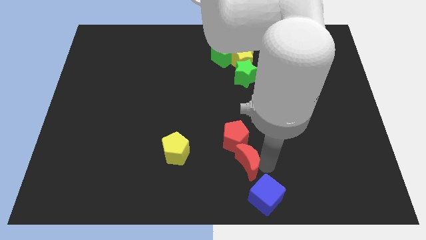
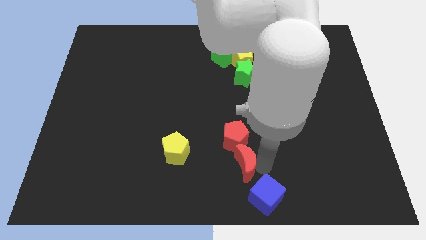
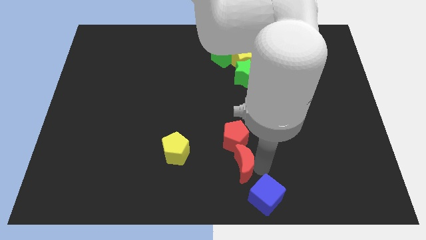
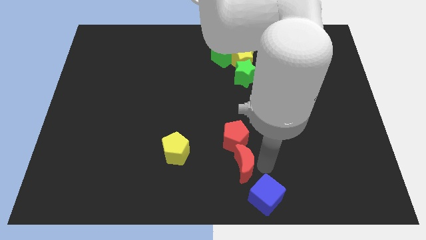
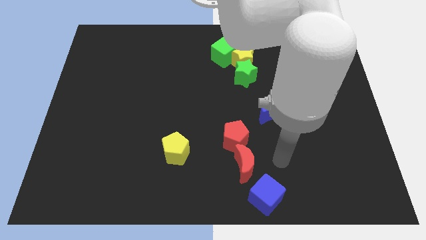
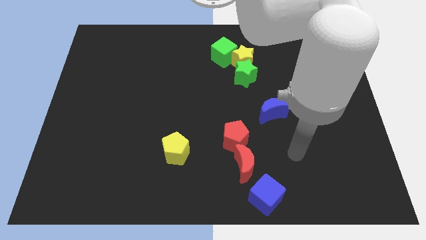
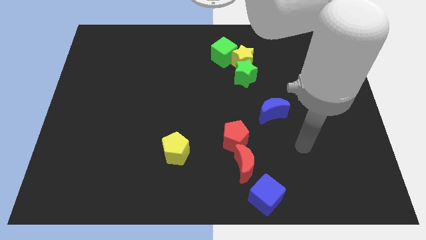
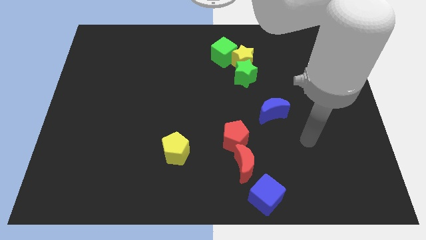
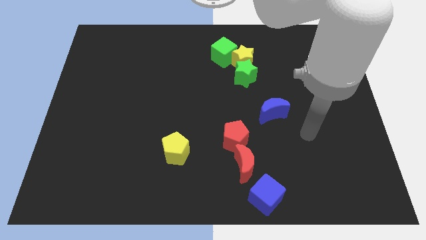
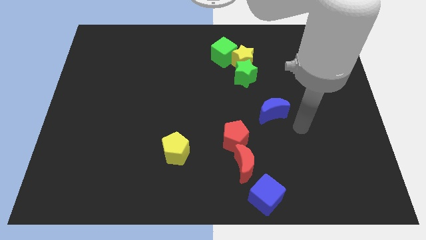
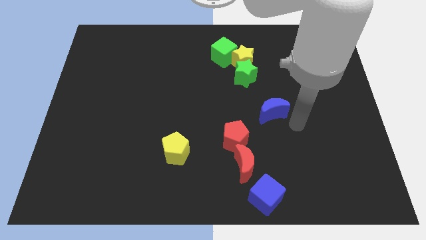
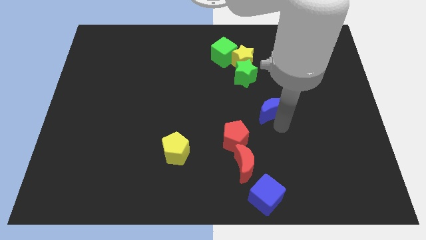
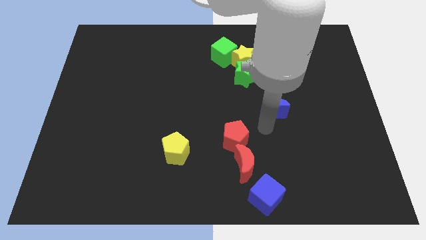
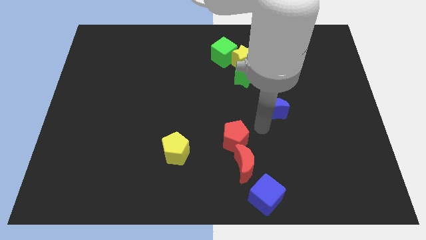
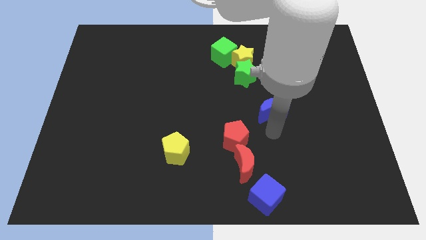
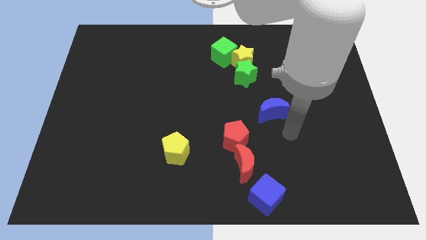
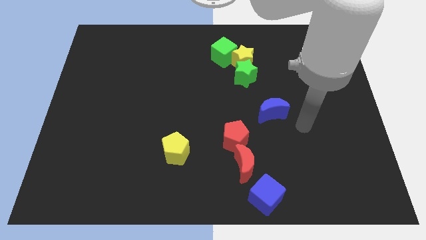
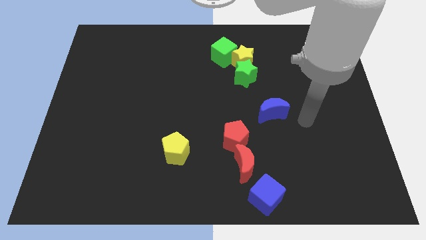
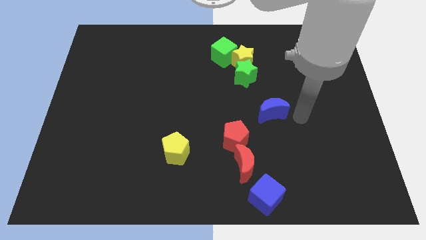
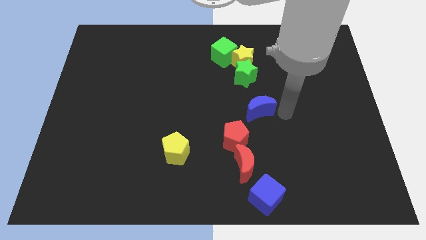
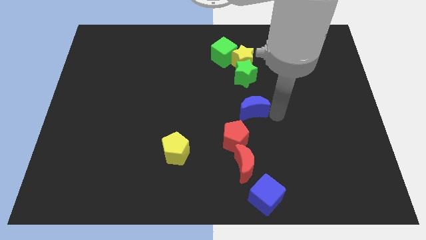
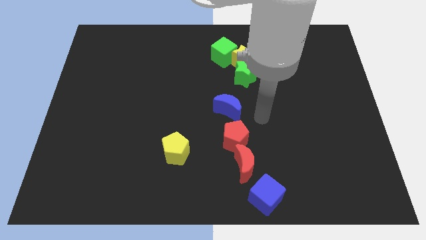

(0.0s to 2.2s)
move blue crescent towards red pentagon

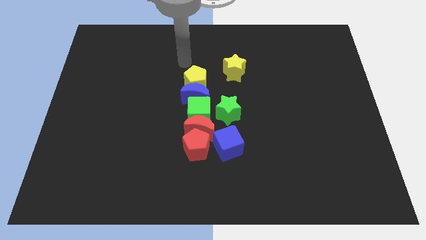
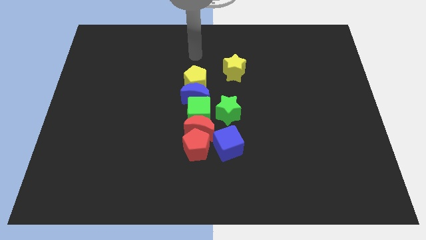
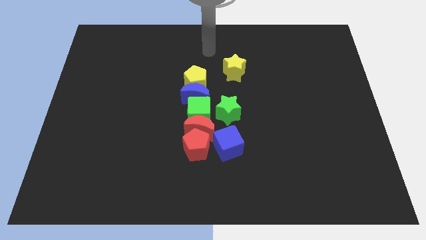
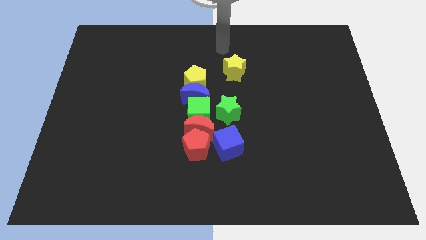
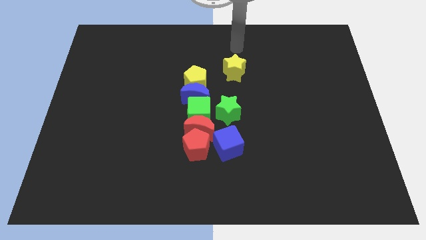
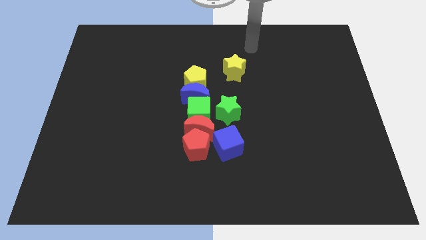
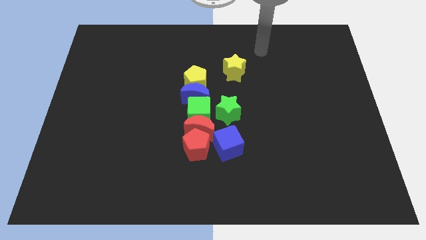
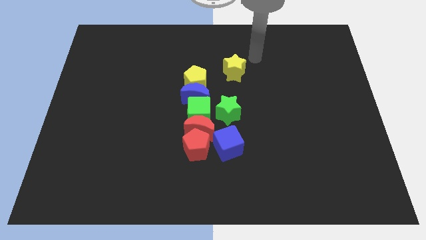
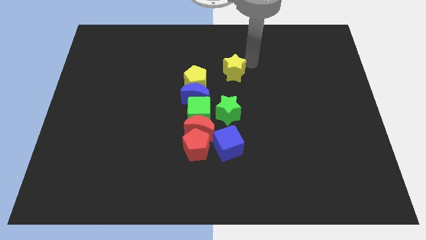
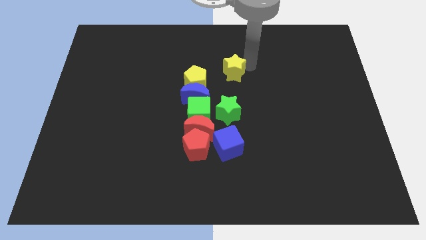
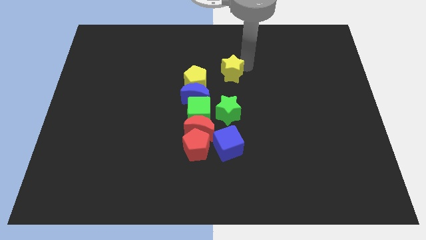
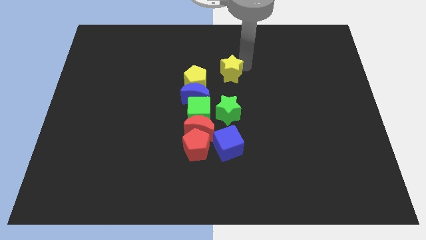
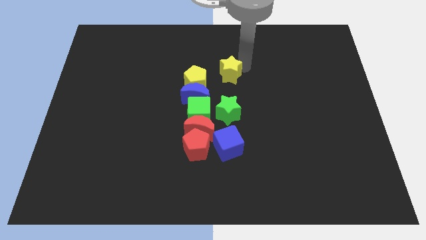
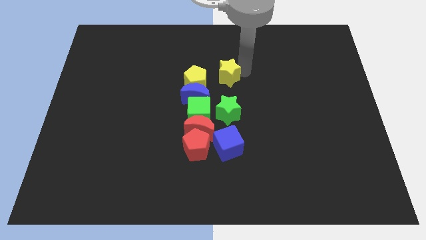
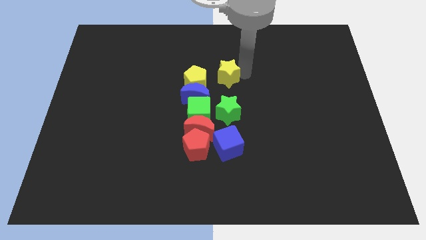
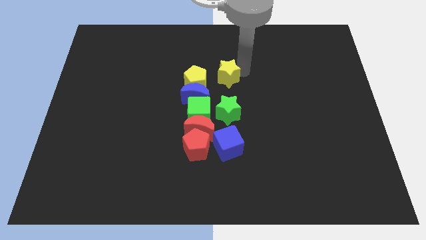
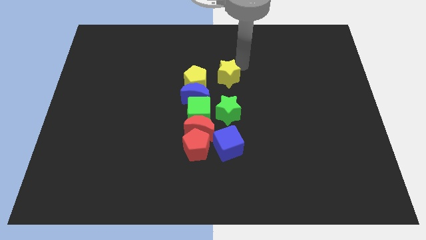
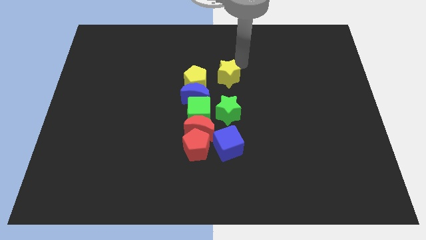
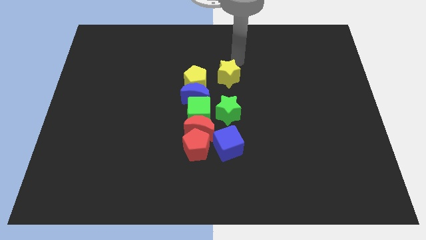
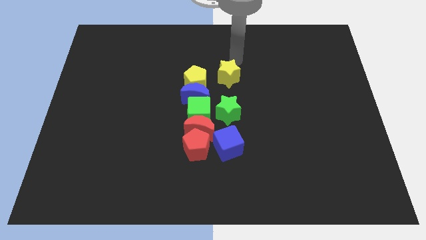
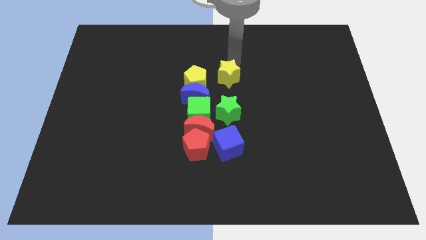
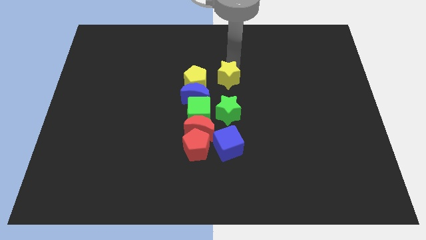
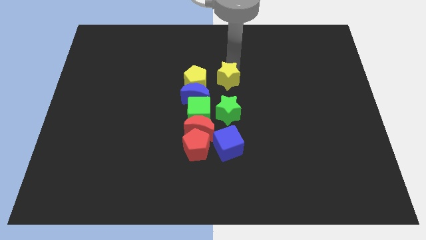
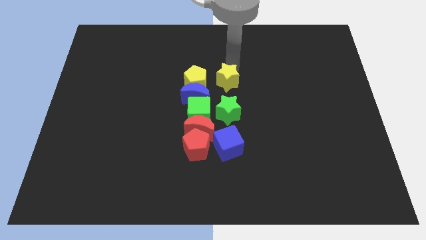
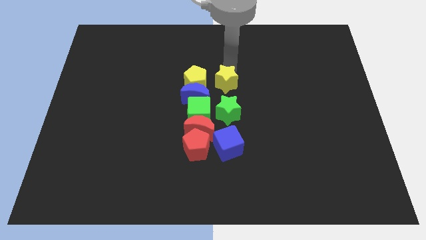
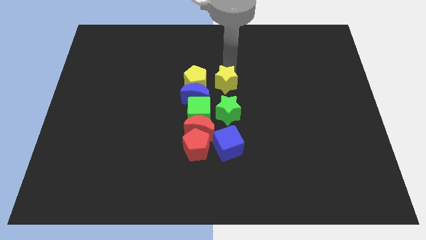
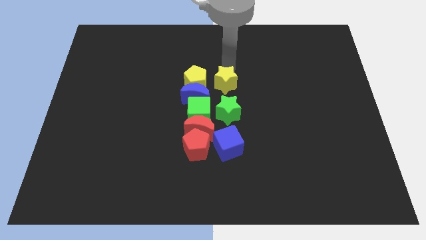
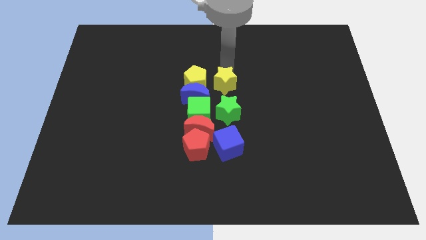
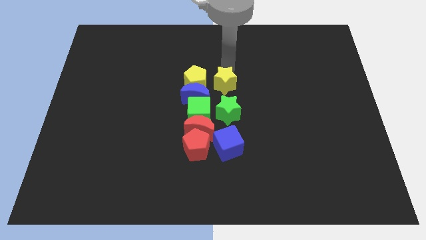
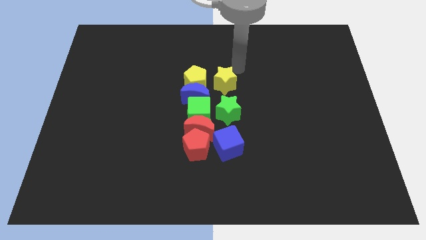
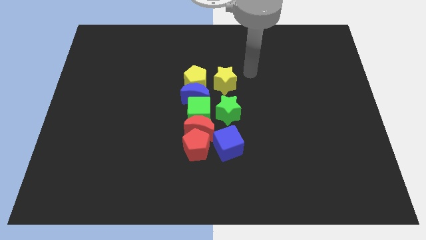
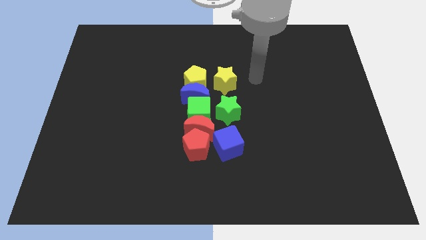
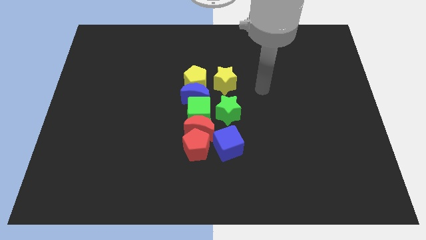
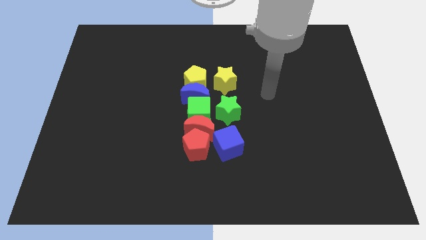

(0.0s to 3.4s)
move the yellow star above the green star

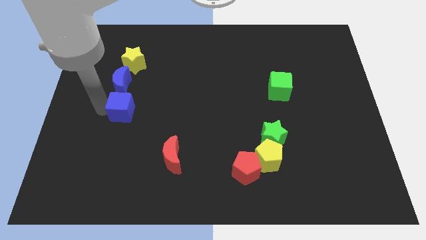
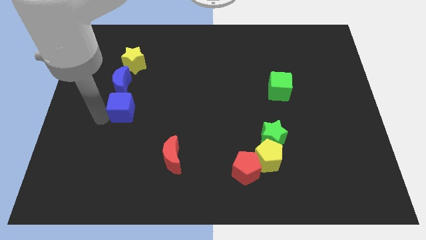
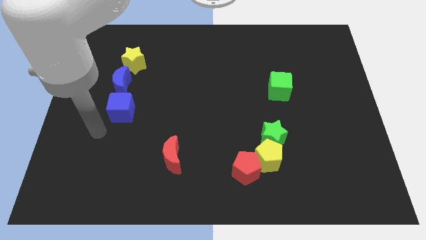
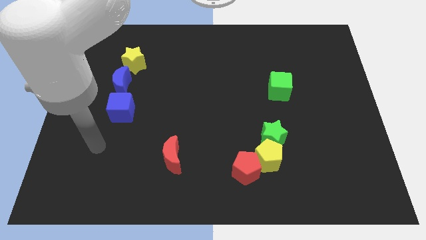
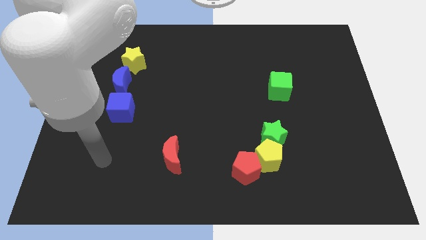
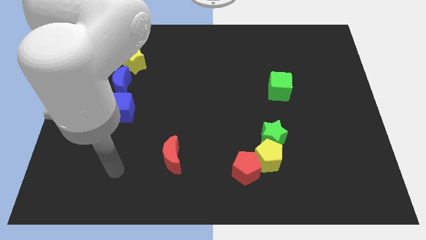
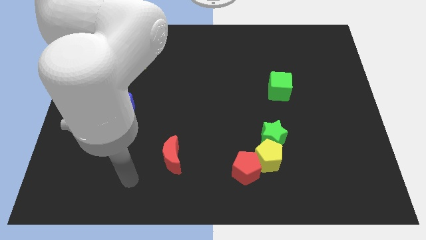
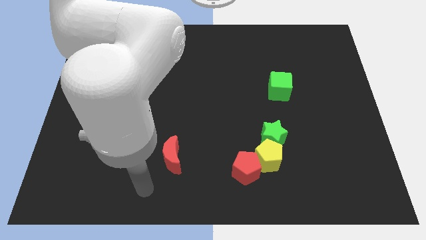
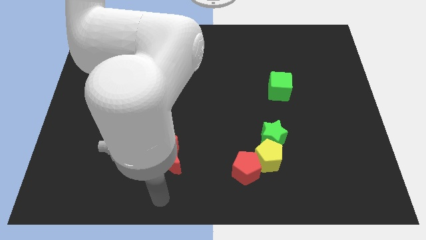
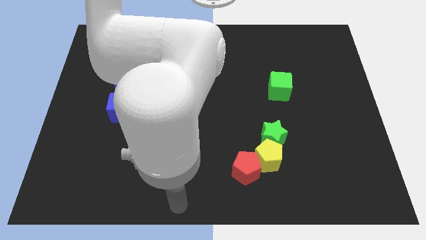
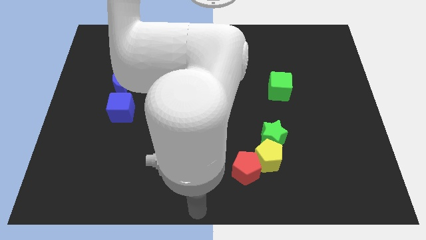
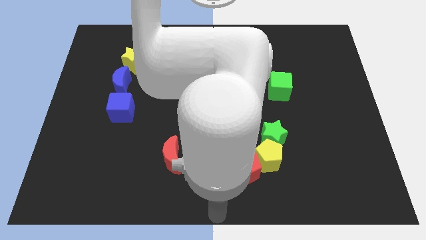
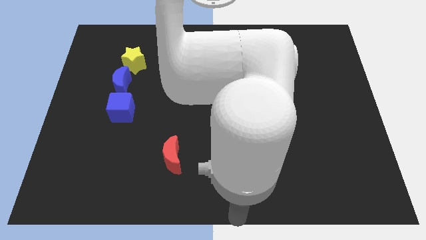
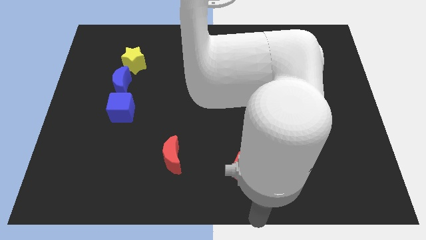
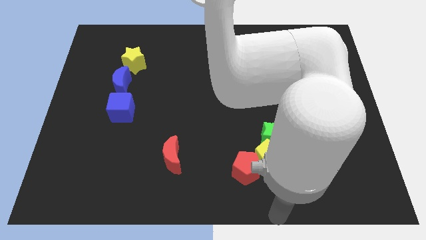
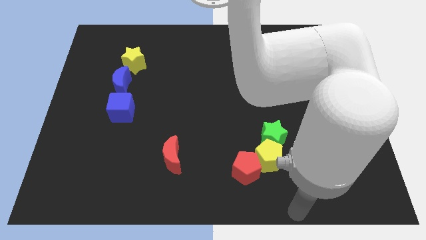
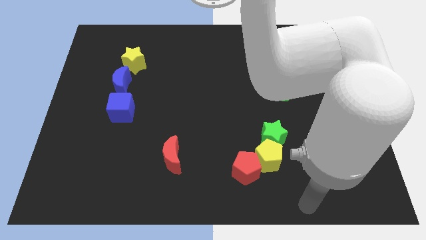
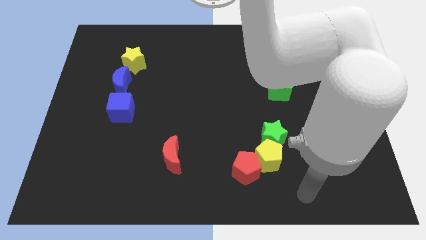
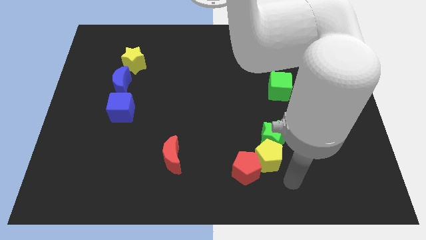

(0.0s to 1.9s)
move the arm away from the blue cube

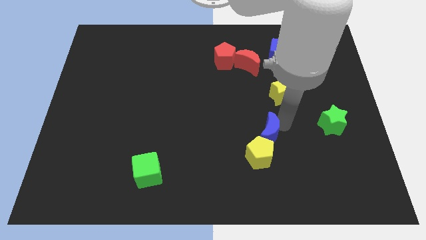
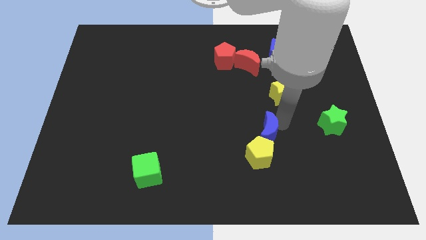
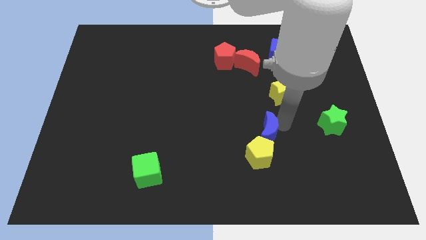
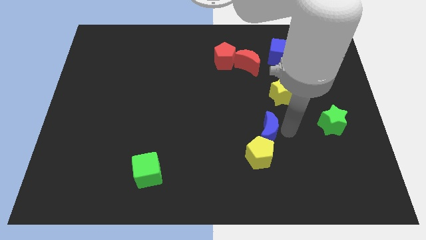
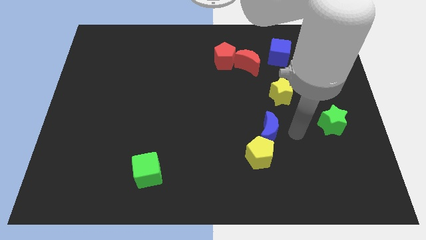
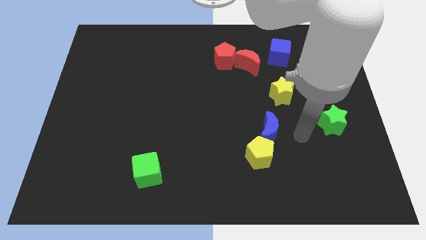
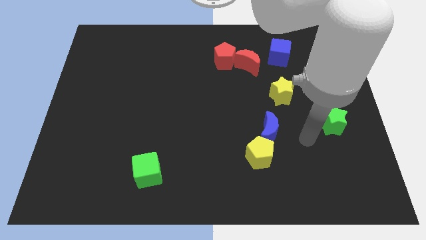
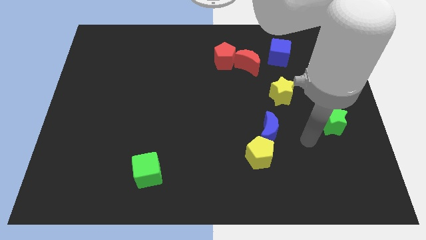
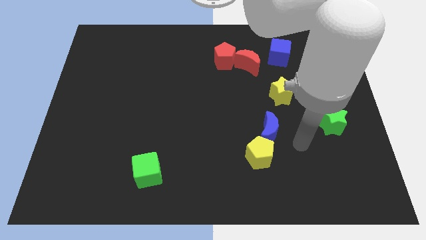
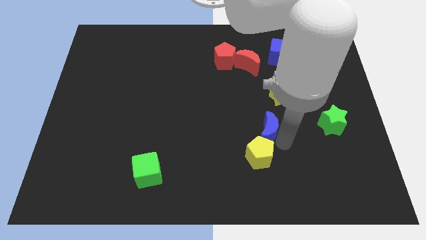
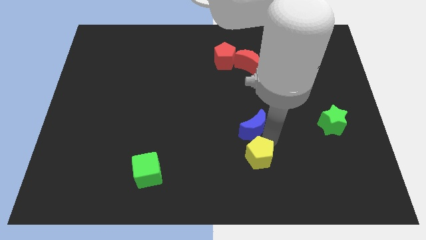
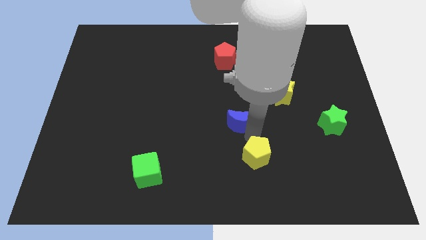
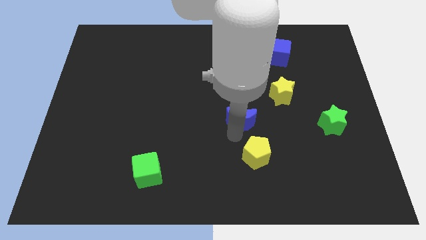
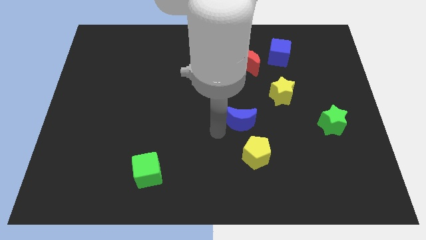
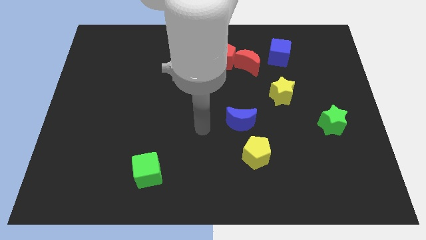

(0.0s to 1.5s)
separate the blue crescent from the yellow pentagon
